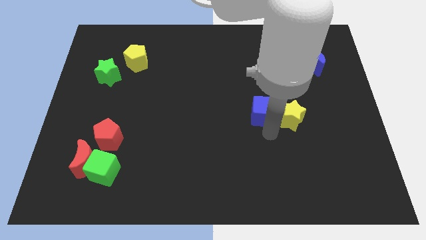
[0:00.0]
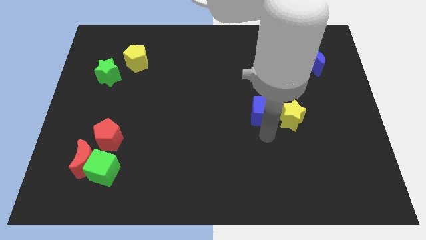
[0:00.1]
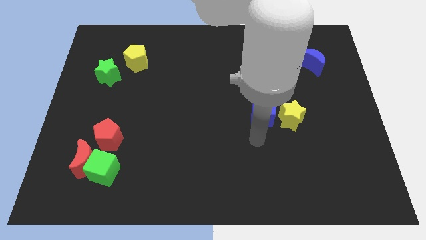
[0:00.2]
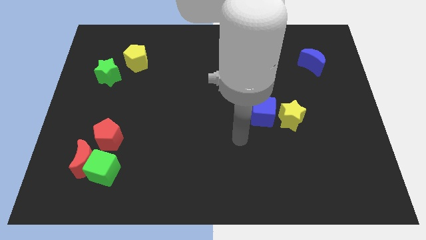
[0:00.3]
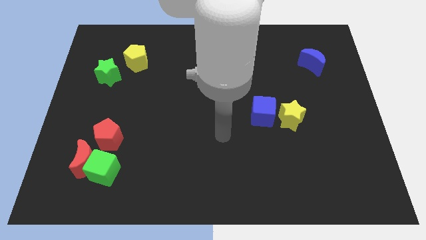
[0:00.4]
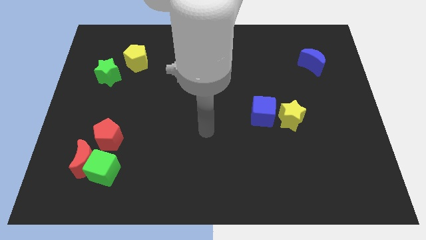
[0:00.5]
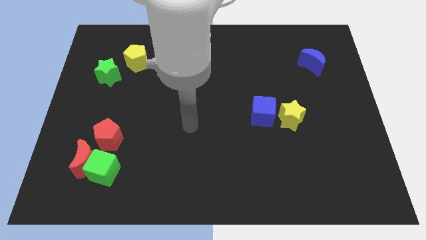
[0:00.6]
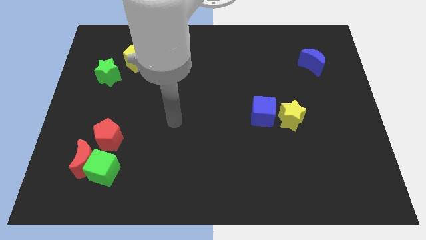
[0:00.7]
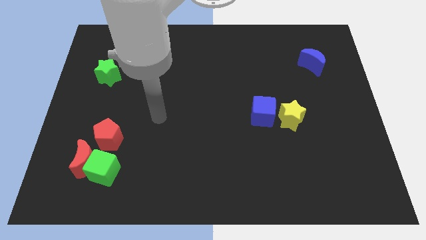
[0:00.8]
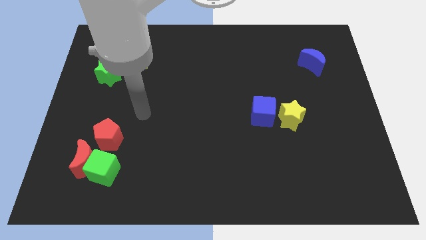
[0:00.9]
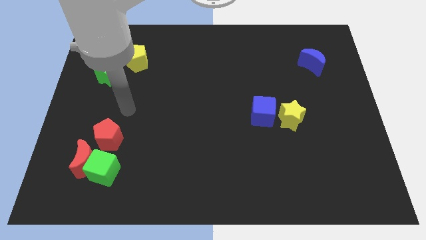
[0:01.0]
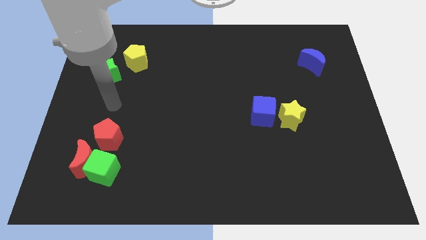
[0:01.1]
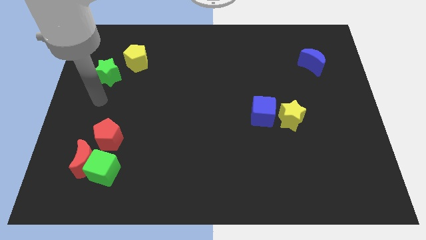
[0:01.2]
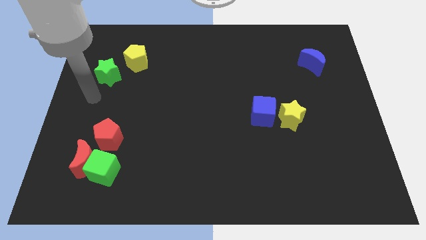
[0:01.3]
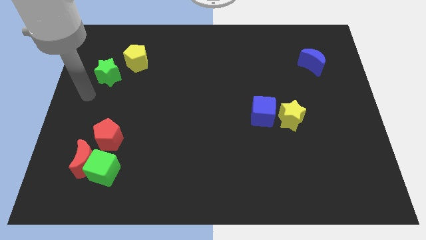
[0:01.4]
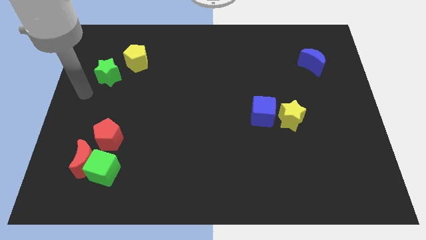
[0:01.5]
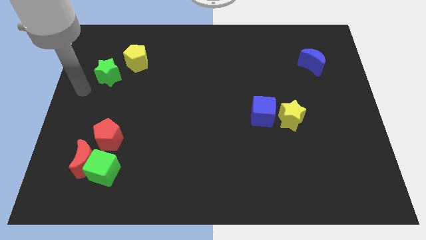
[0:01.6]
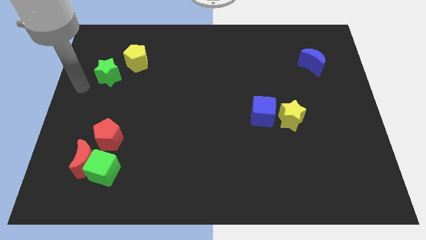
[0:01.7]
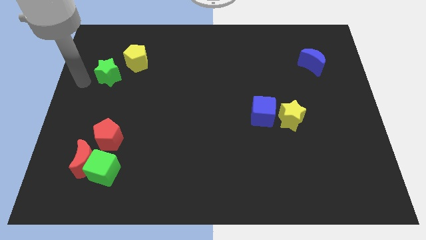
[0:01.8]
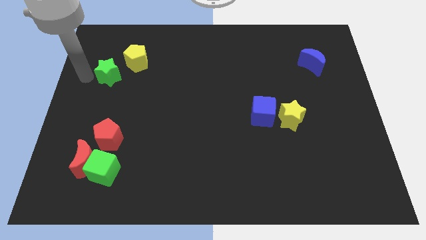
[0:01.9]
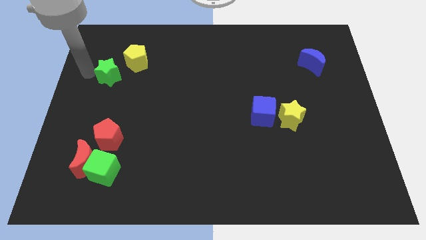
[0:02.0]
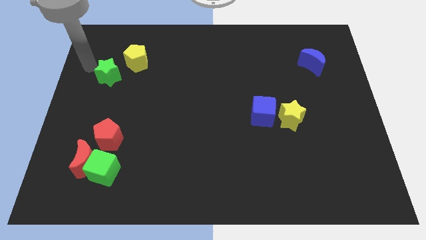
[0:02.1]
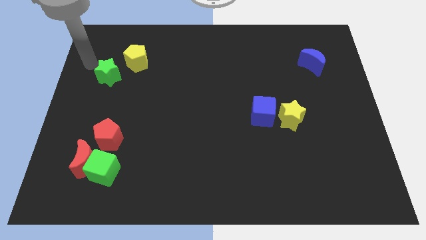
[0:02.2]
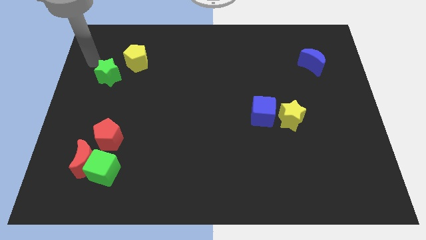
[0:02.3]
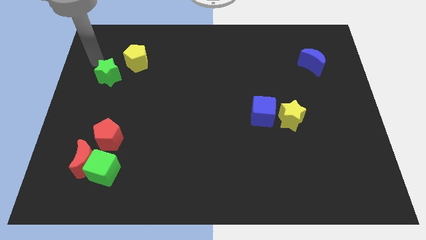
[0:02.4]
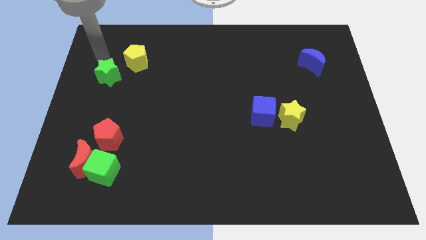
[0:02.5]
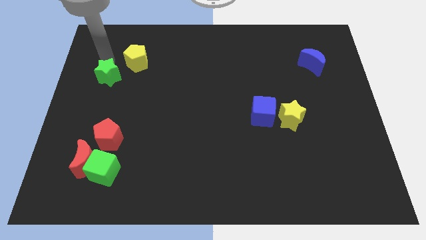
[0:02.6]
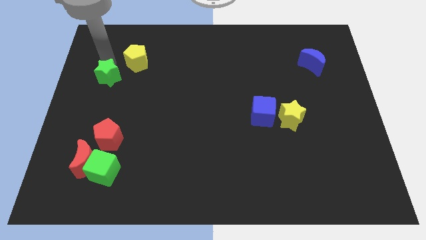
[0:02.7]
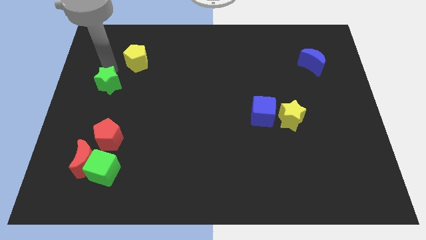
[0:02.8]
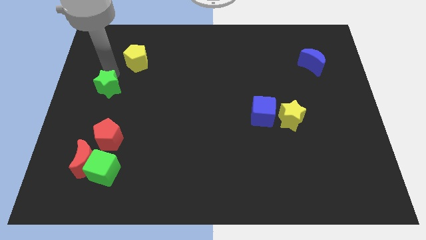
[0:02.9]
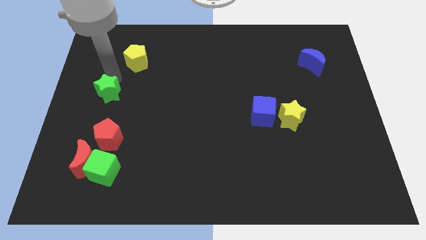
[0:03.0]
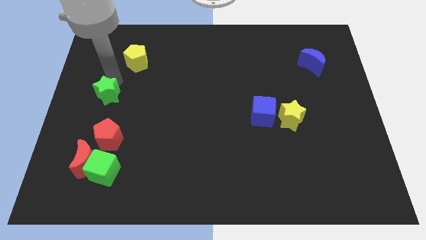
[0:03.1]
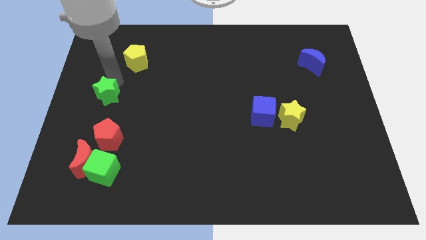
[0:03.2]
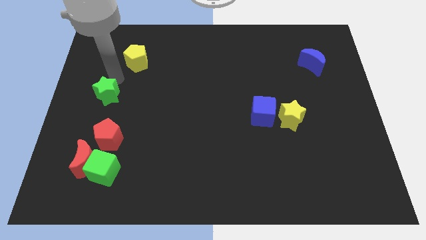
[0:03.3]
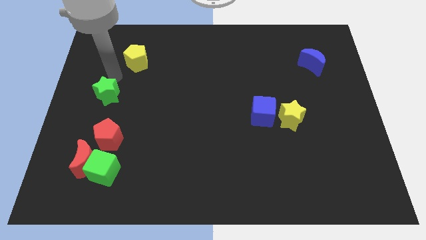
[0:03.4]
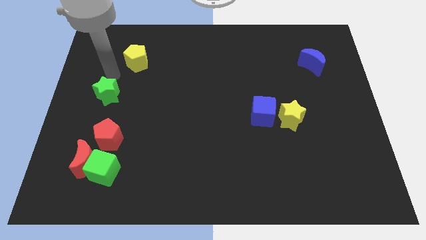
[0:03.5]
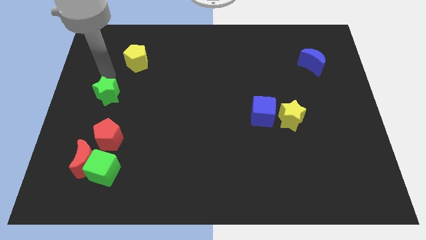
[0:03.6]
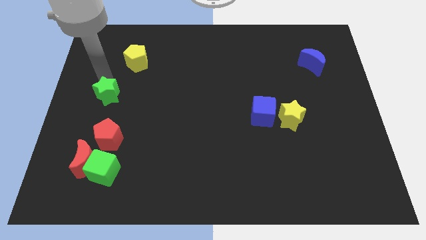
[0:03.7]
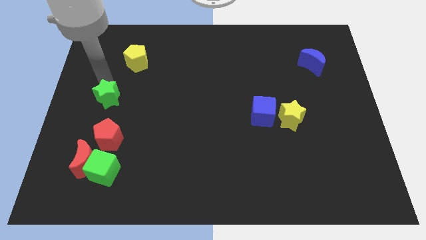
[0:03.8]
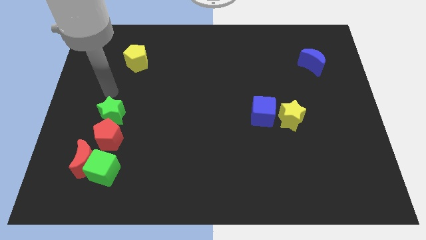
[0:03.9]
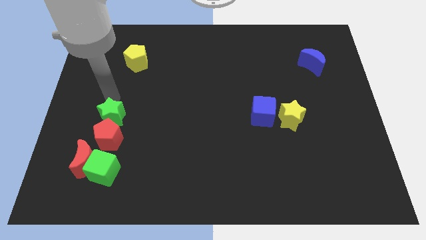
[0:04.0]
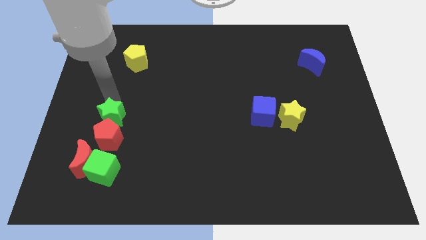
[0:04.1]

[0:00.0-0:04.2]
push the green star close to the top side of the red pentagon

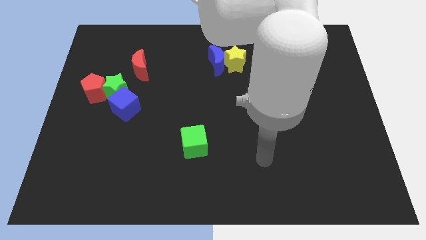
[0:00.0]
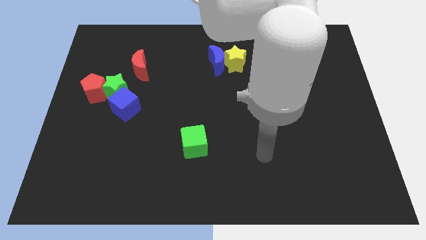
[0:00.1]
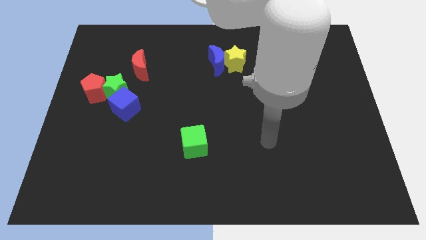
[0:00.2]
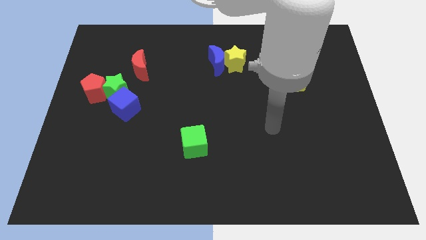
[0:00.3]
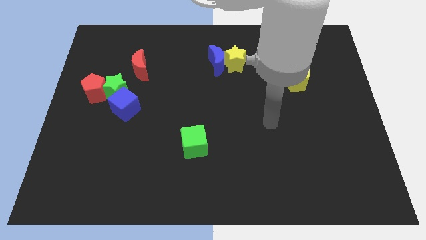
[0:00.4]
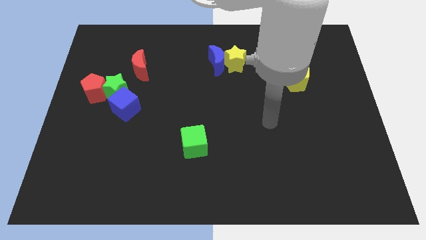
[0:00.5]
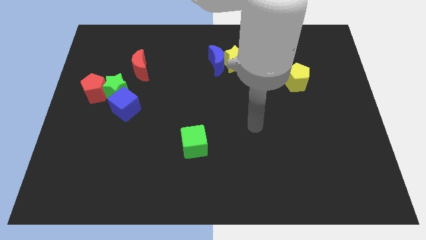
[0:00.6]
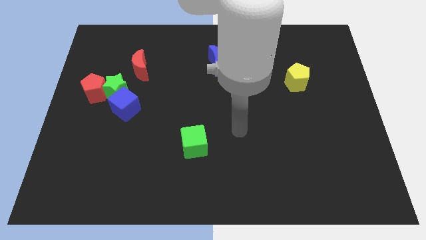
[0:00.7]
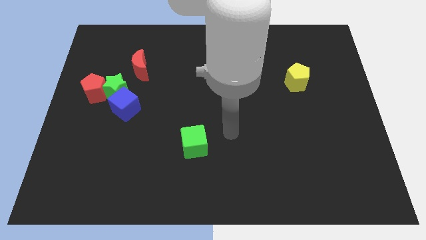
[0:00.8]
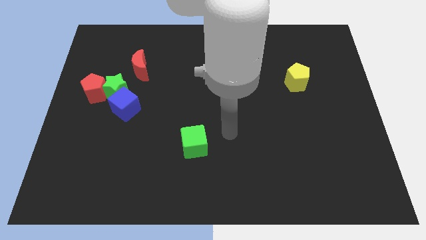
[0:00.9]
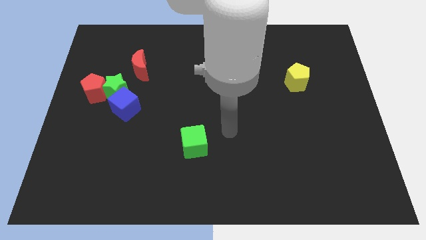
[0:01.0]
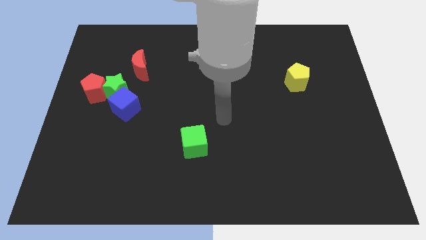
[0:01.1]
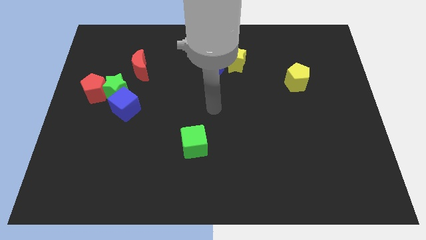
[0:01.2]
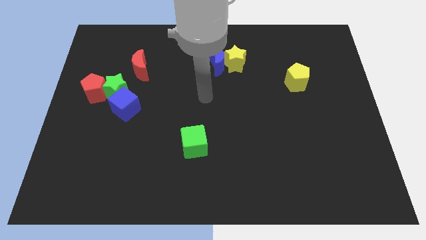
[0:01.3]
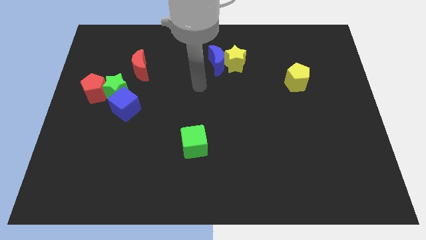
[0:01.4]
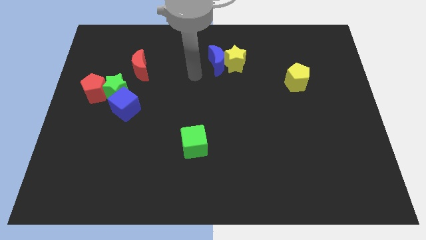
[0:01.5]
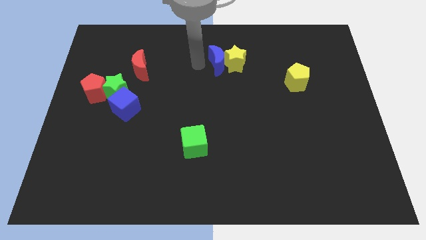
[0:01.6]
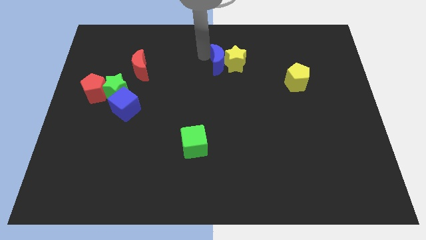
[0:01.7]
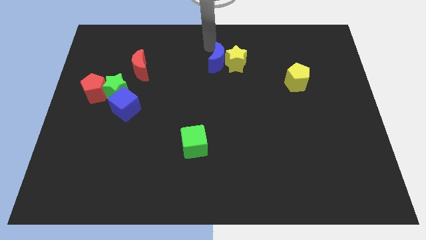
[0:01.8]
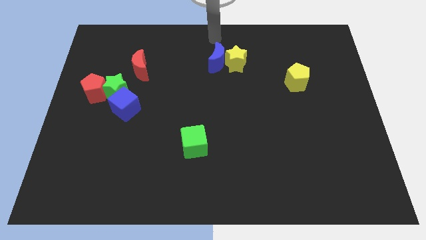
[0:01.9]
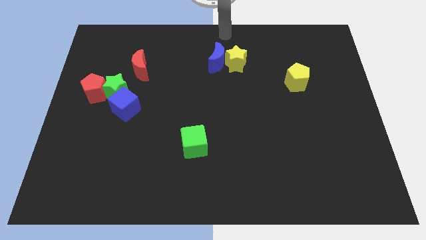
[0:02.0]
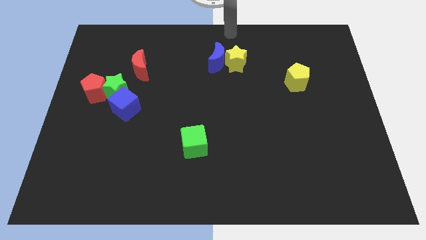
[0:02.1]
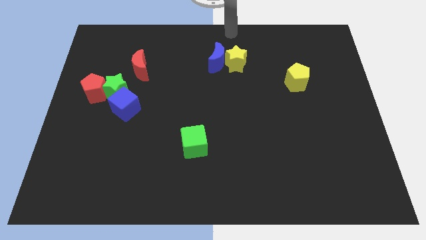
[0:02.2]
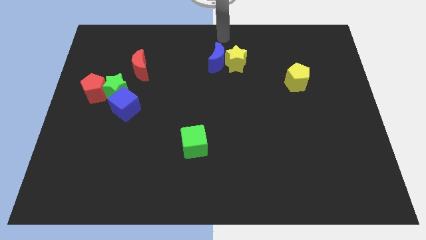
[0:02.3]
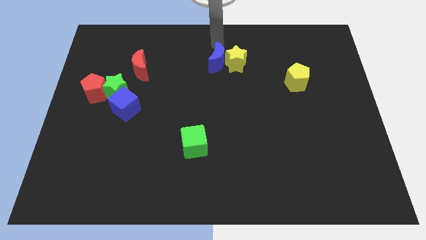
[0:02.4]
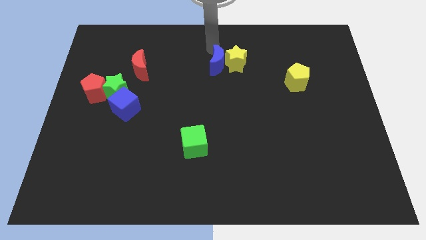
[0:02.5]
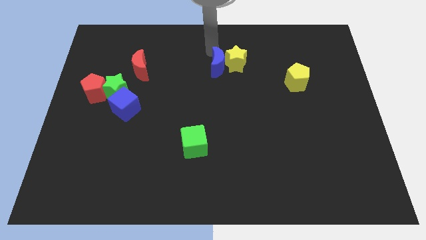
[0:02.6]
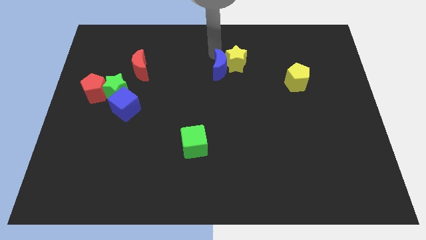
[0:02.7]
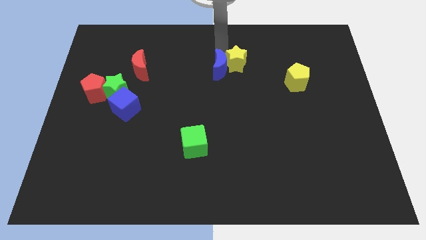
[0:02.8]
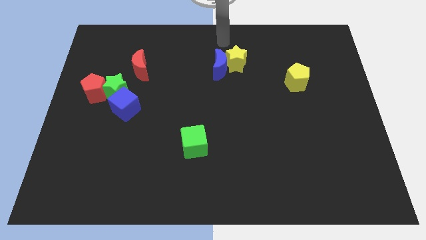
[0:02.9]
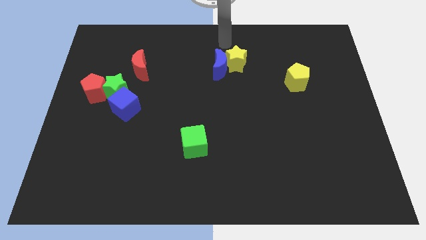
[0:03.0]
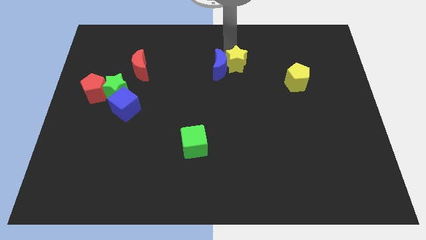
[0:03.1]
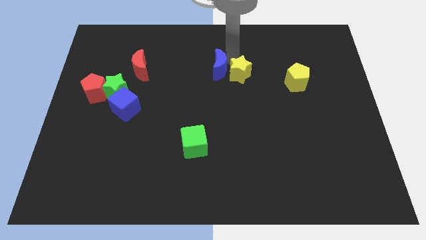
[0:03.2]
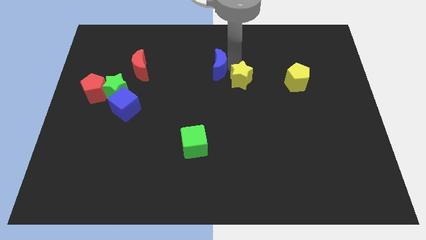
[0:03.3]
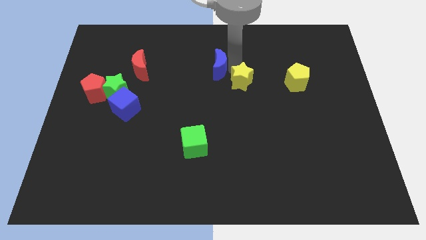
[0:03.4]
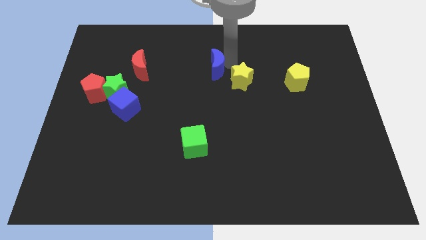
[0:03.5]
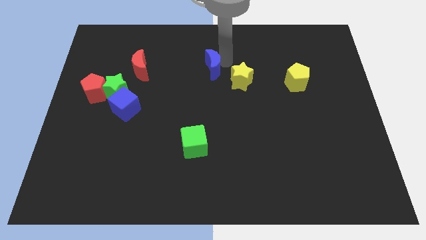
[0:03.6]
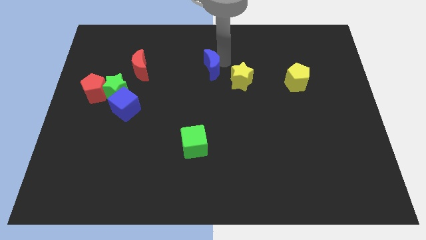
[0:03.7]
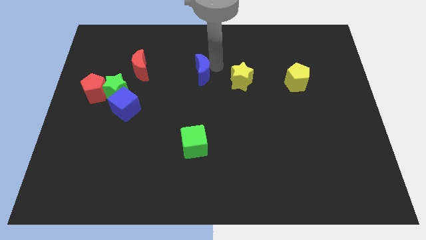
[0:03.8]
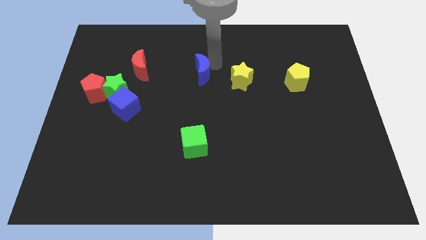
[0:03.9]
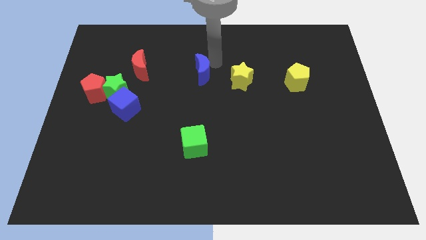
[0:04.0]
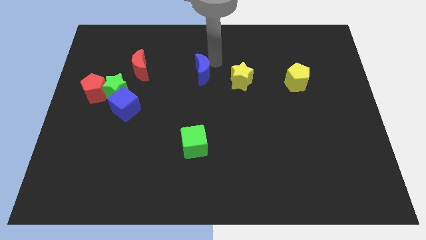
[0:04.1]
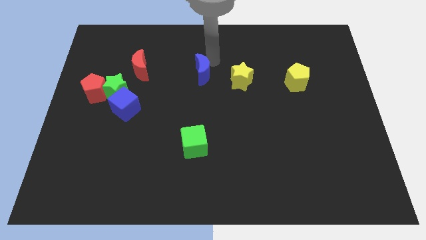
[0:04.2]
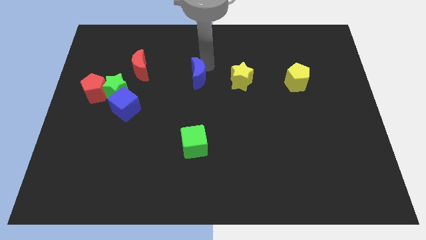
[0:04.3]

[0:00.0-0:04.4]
separate the blue crescent and the yellow star

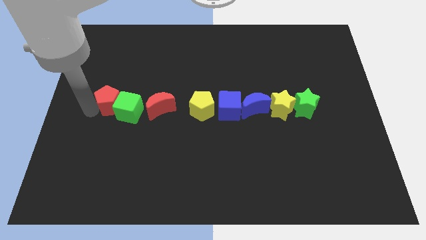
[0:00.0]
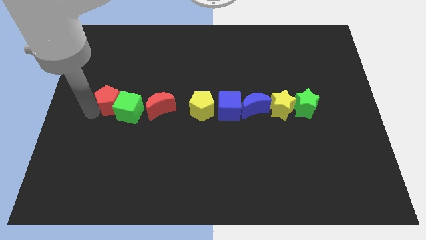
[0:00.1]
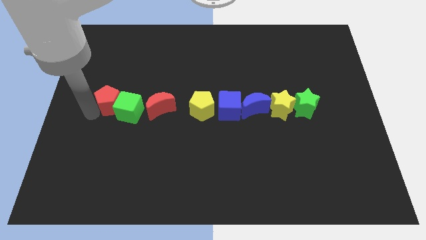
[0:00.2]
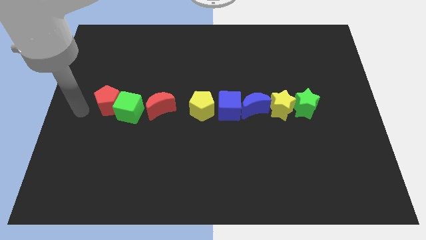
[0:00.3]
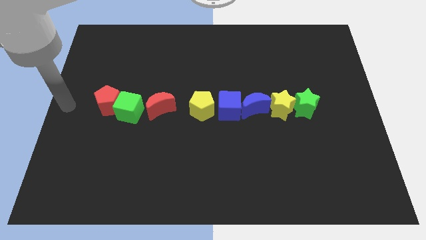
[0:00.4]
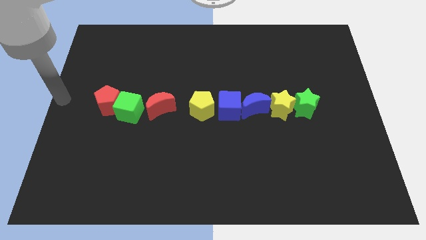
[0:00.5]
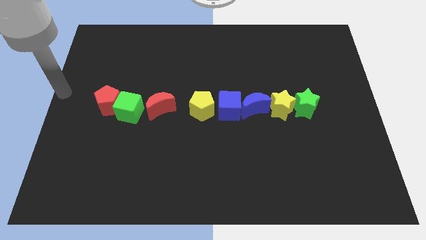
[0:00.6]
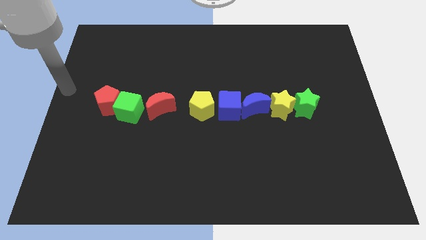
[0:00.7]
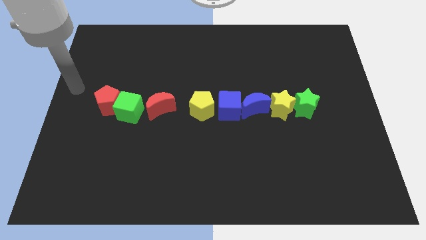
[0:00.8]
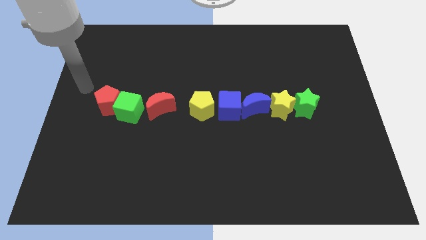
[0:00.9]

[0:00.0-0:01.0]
move your arm away from the red pentagon
